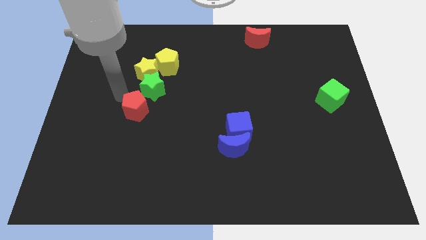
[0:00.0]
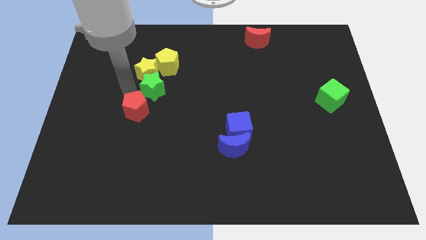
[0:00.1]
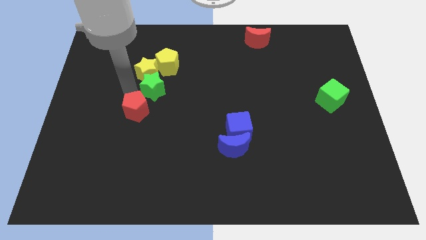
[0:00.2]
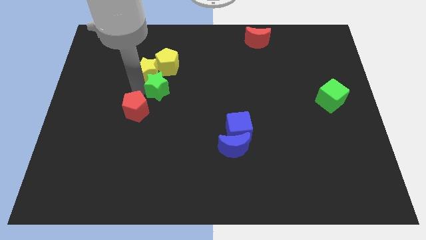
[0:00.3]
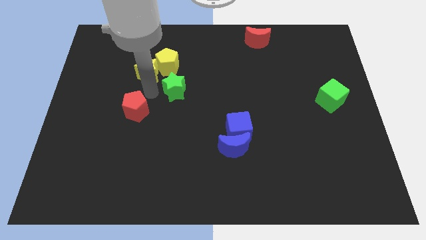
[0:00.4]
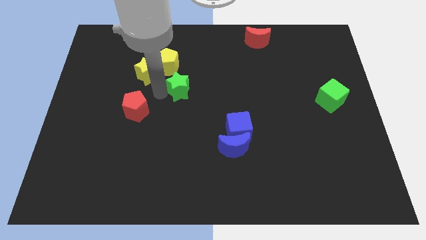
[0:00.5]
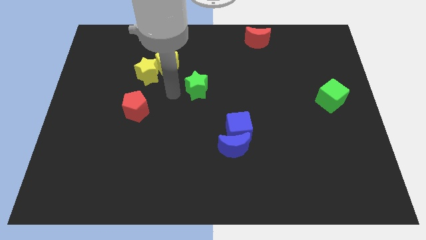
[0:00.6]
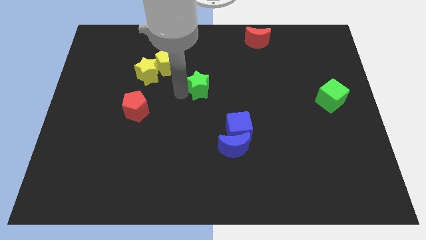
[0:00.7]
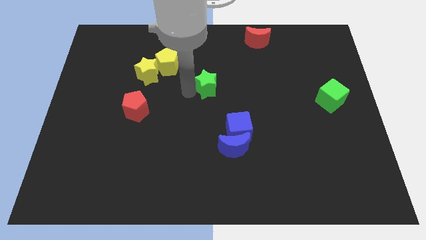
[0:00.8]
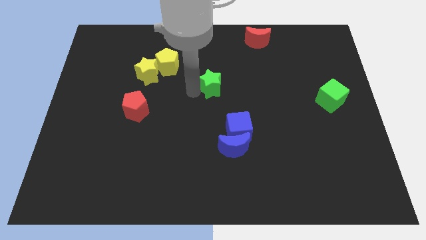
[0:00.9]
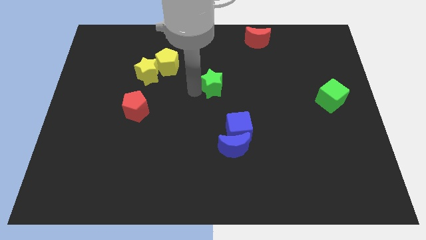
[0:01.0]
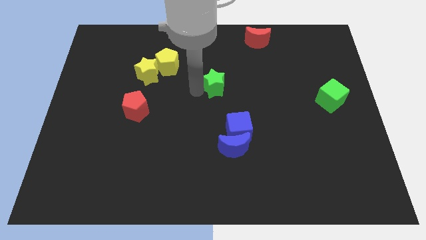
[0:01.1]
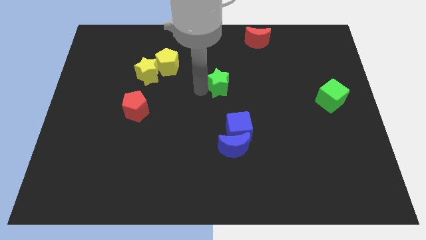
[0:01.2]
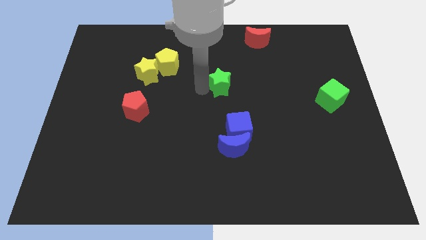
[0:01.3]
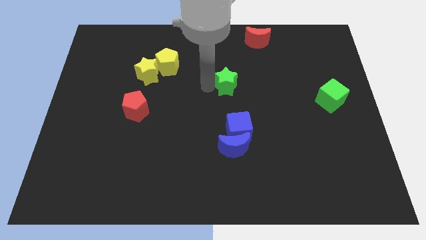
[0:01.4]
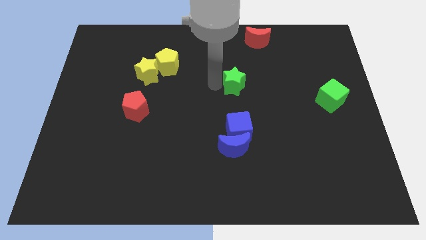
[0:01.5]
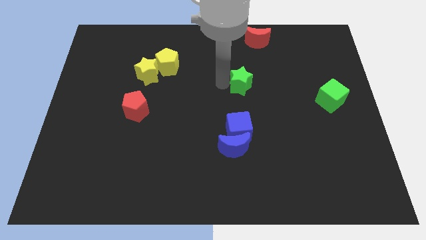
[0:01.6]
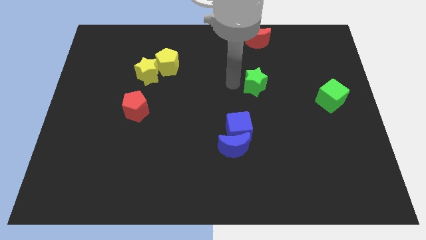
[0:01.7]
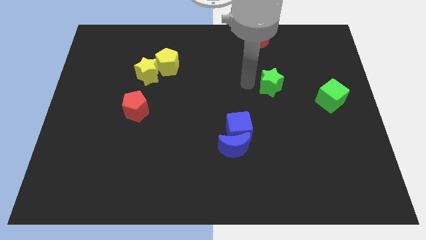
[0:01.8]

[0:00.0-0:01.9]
separate the green star from the yellow star

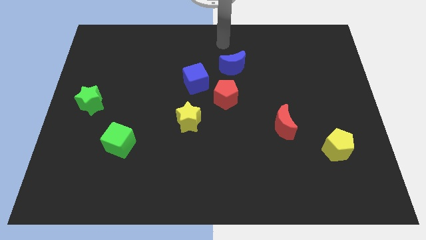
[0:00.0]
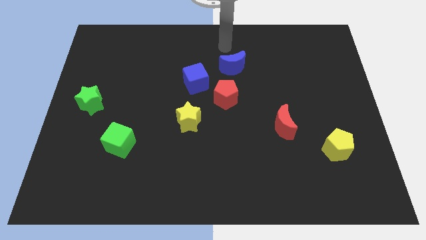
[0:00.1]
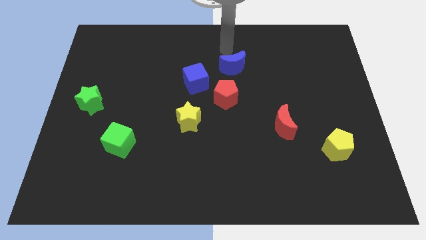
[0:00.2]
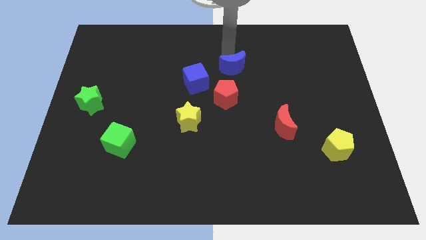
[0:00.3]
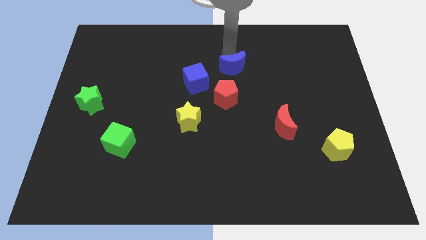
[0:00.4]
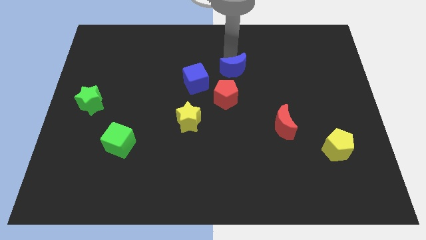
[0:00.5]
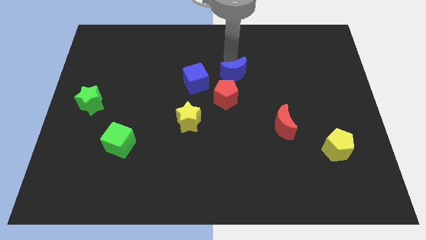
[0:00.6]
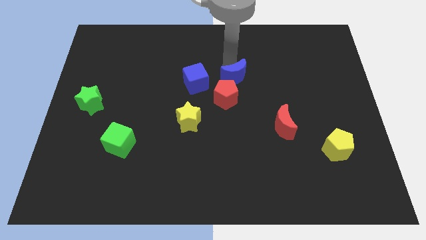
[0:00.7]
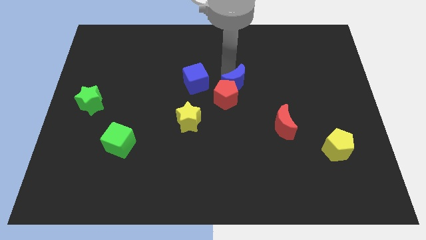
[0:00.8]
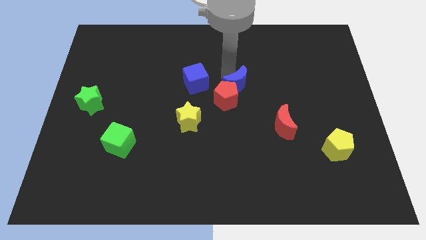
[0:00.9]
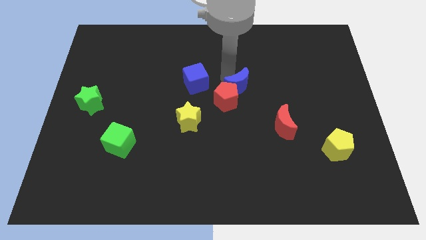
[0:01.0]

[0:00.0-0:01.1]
push the blue crescent into the red pentagon

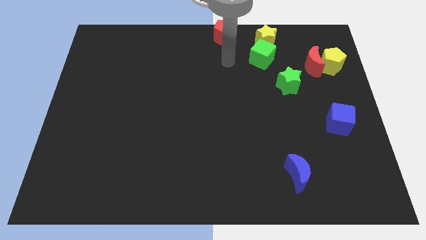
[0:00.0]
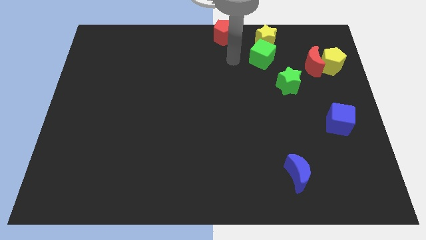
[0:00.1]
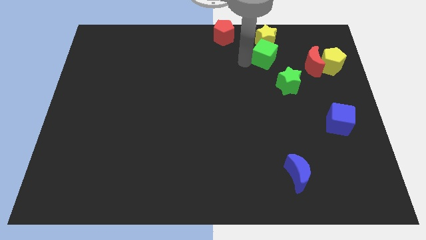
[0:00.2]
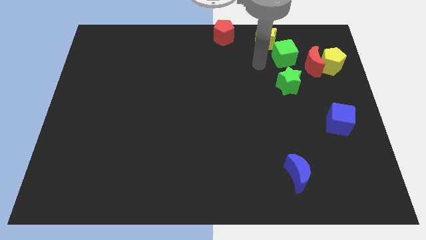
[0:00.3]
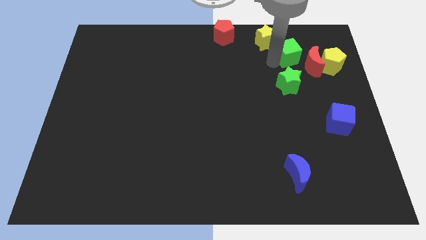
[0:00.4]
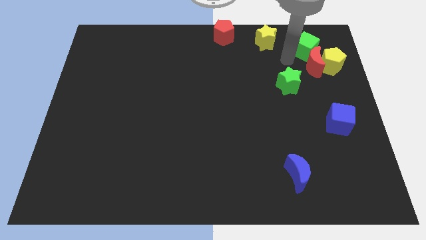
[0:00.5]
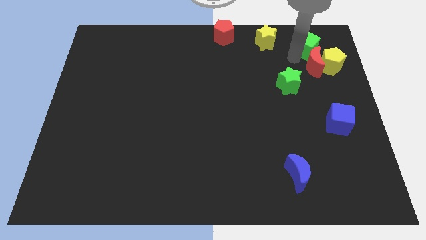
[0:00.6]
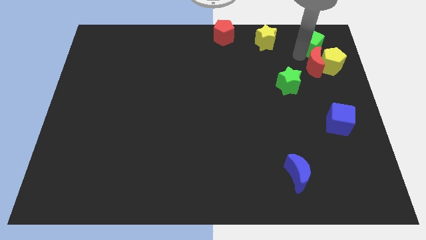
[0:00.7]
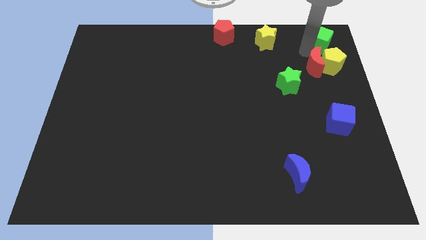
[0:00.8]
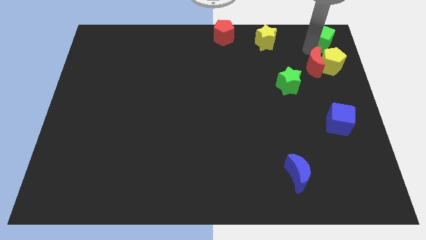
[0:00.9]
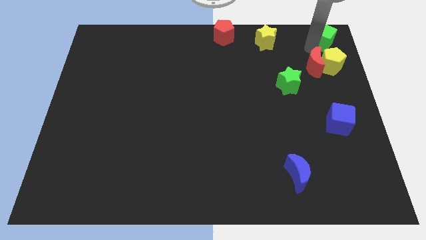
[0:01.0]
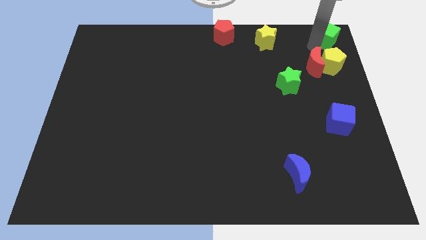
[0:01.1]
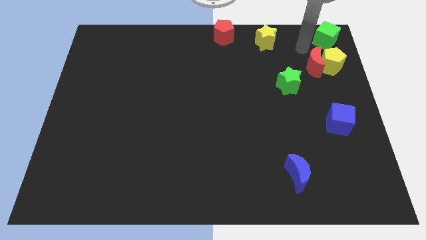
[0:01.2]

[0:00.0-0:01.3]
move the green cube to the top of the yellow pentagon

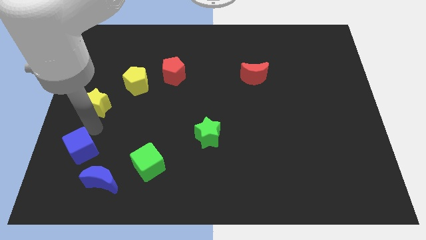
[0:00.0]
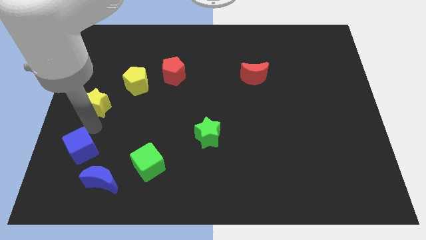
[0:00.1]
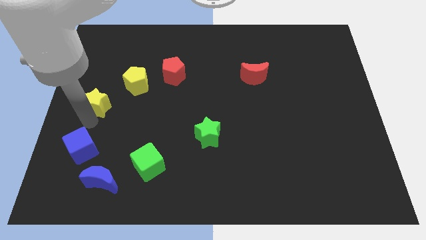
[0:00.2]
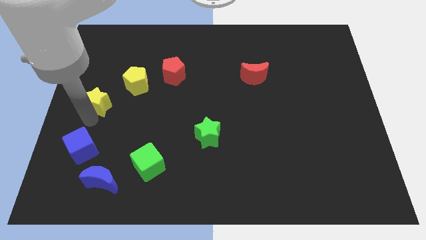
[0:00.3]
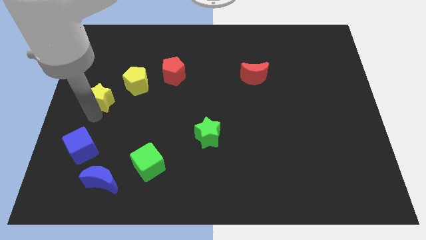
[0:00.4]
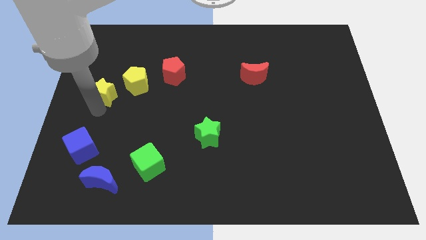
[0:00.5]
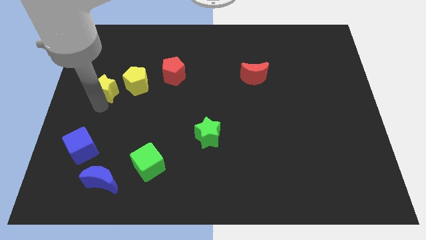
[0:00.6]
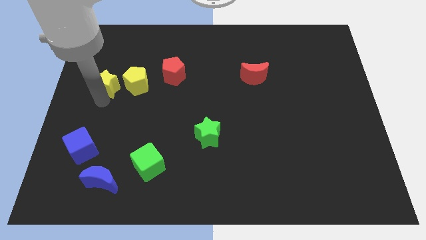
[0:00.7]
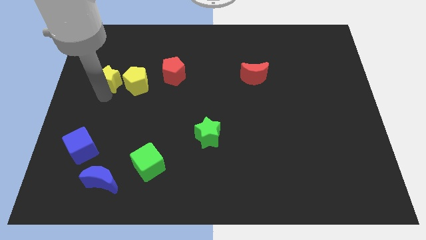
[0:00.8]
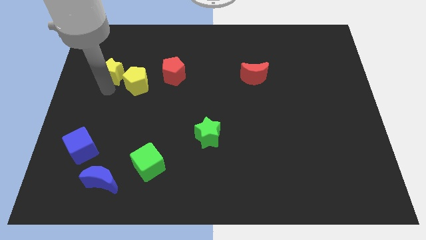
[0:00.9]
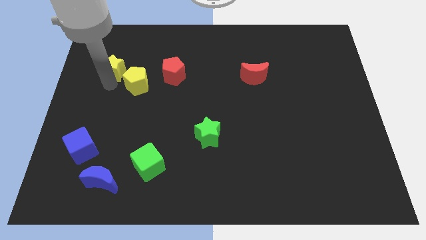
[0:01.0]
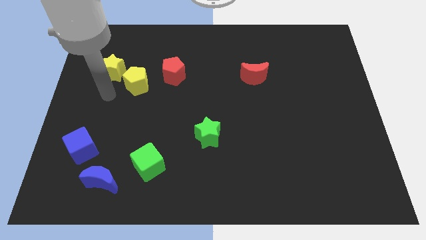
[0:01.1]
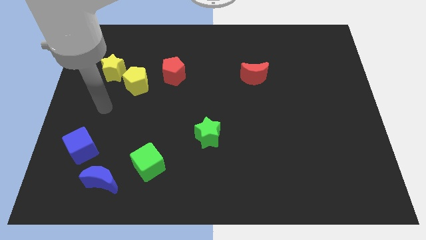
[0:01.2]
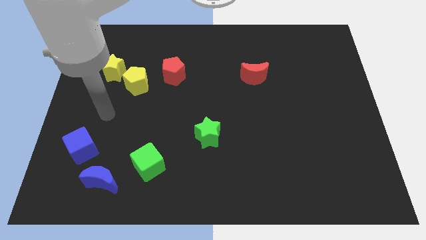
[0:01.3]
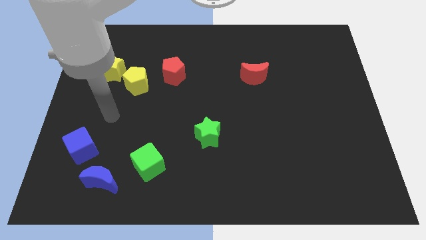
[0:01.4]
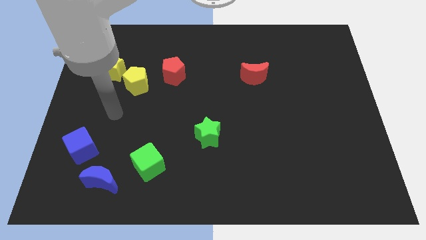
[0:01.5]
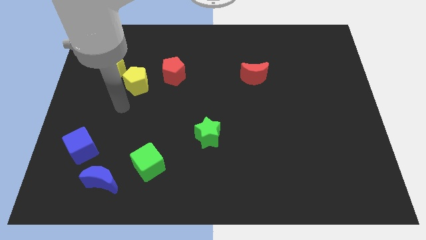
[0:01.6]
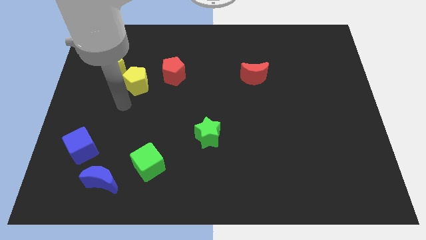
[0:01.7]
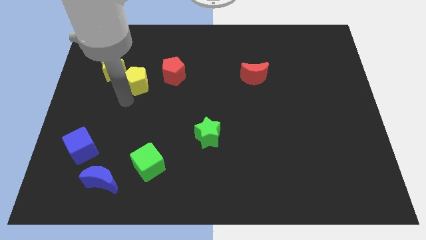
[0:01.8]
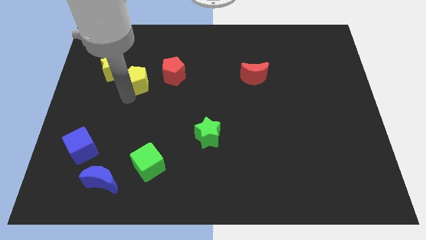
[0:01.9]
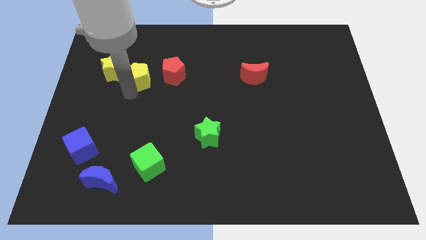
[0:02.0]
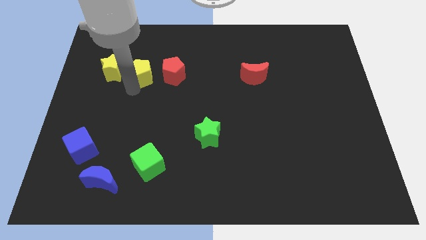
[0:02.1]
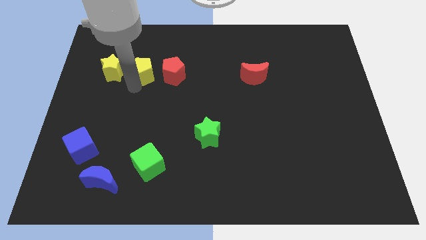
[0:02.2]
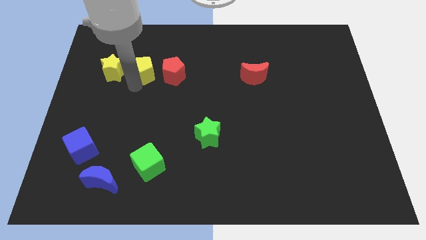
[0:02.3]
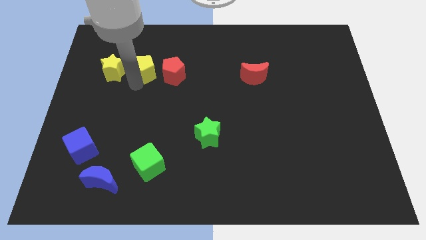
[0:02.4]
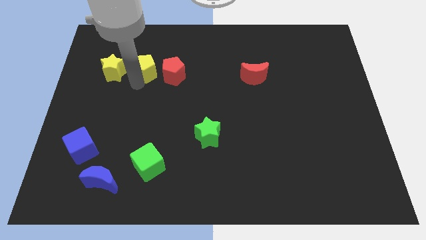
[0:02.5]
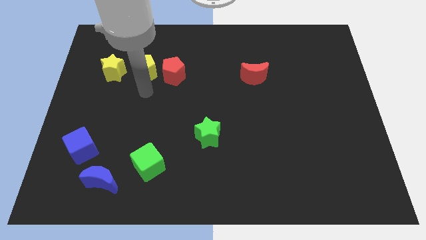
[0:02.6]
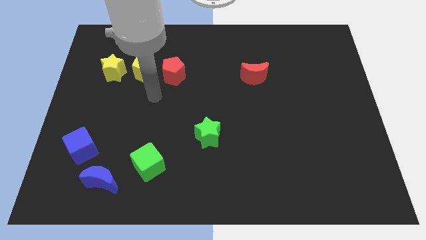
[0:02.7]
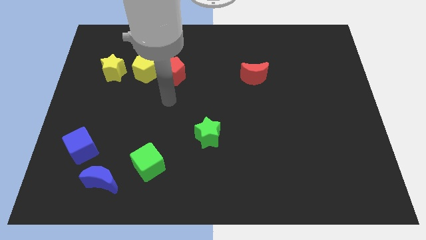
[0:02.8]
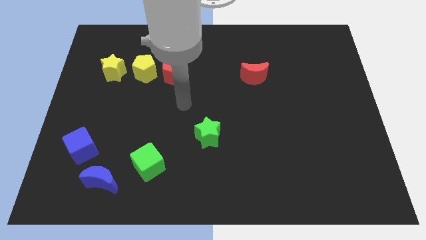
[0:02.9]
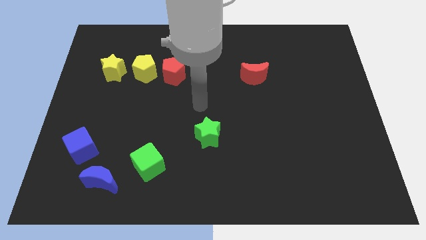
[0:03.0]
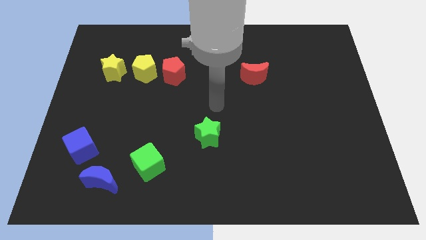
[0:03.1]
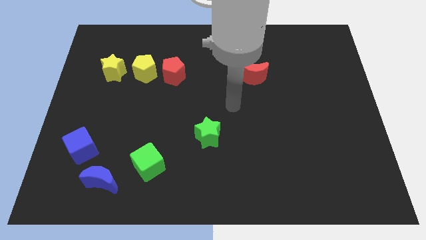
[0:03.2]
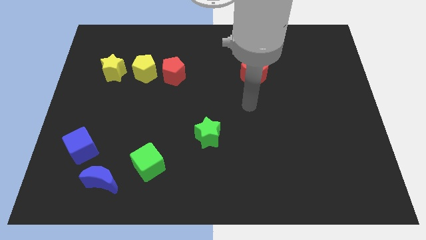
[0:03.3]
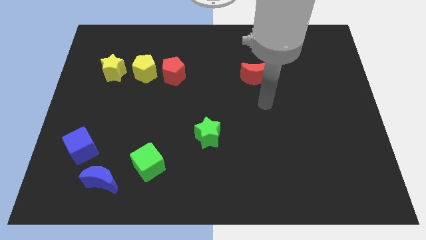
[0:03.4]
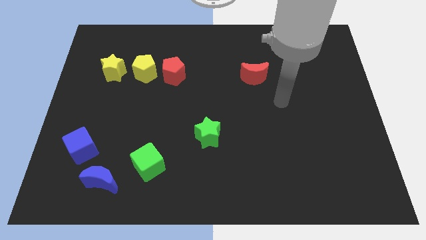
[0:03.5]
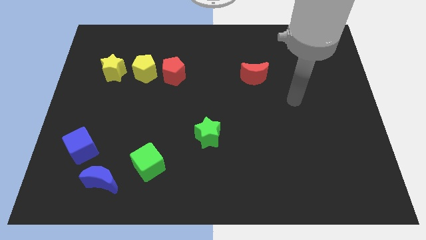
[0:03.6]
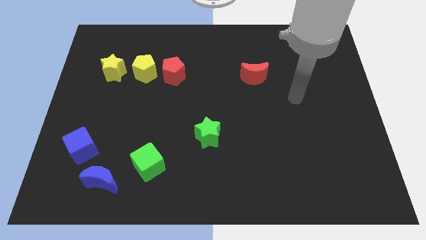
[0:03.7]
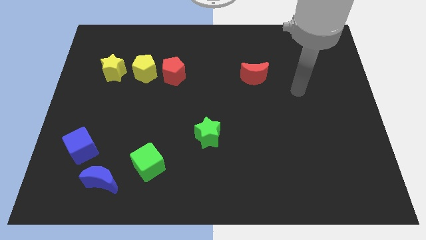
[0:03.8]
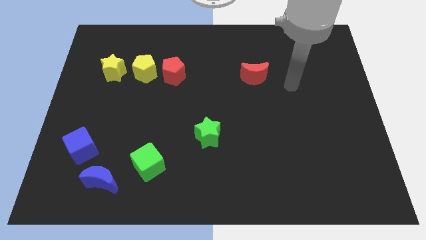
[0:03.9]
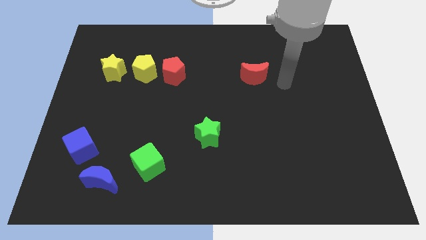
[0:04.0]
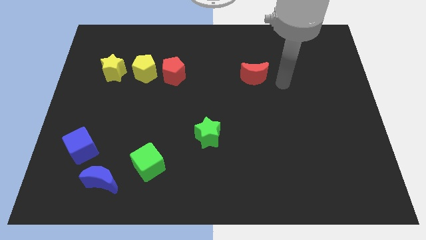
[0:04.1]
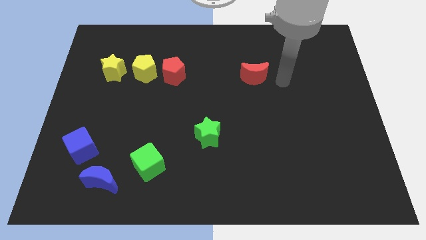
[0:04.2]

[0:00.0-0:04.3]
arrange all the blocks properly in a line

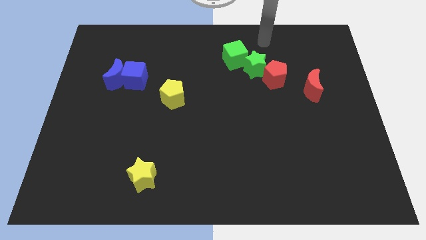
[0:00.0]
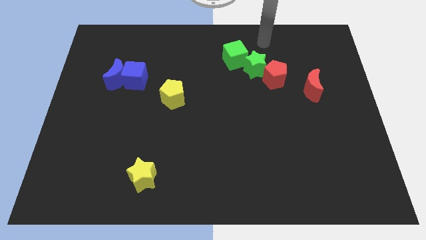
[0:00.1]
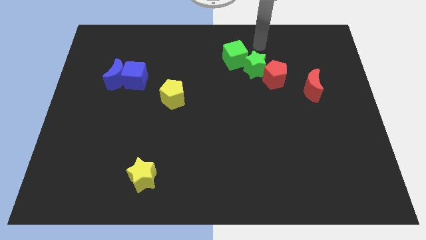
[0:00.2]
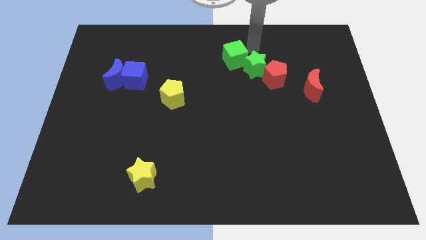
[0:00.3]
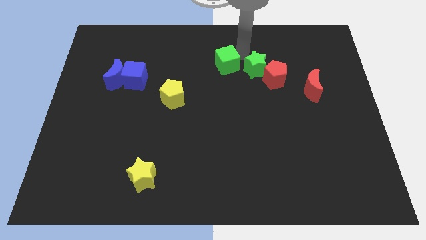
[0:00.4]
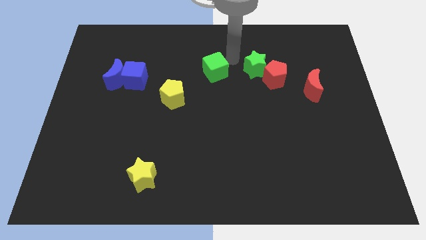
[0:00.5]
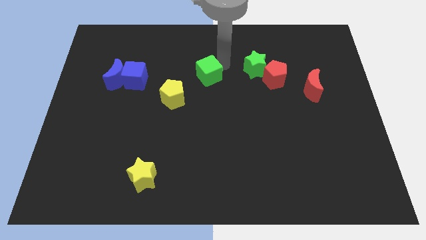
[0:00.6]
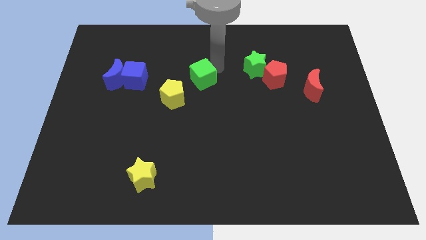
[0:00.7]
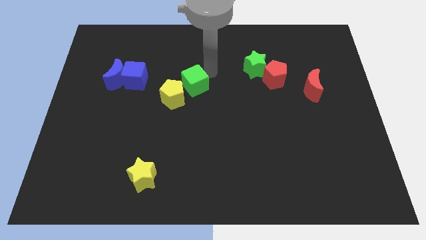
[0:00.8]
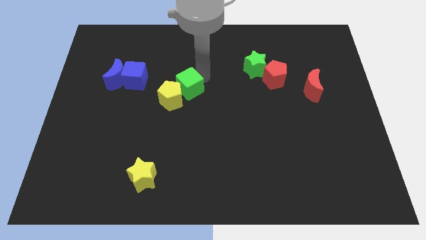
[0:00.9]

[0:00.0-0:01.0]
push green cube towards yellow pentagon
